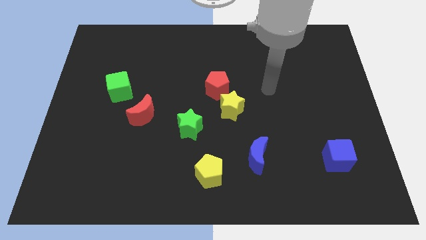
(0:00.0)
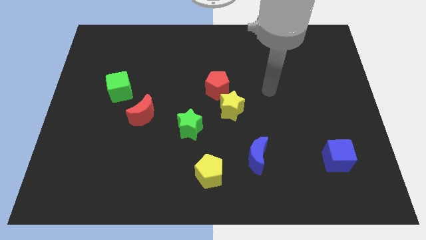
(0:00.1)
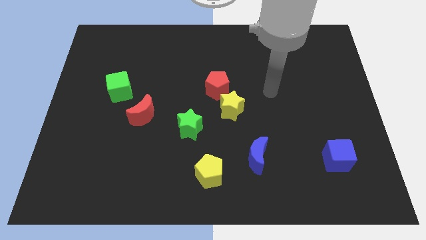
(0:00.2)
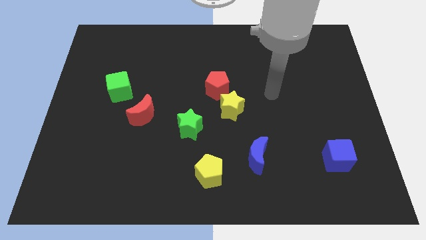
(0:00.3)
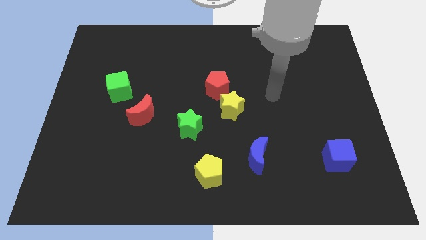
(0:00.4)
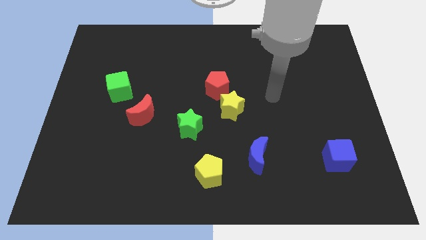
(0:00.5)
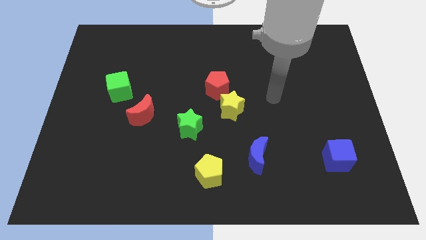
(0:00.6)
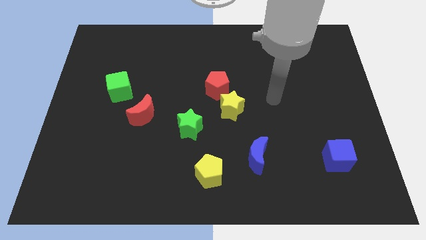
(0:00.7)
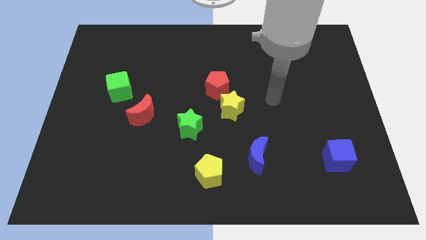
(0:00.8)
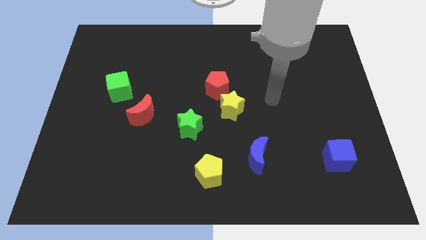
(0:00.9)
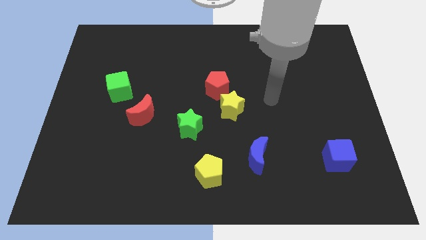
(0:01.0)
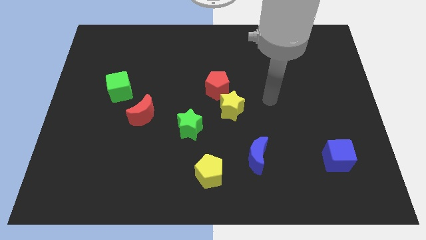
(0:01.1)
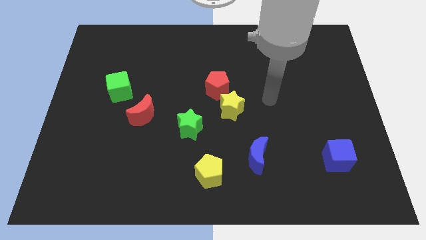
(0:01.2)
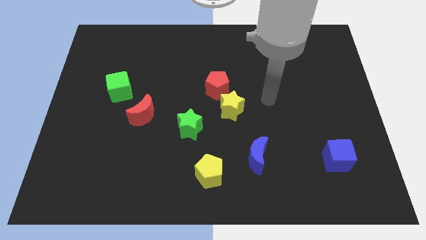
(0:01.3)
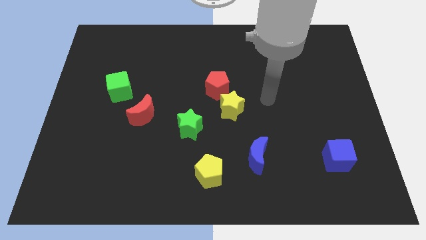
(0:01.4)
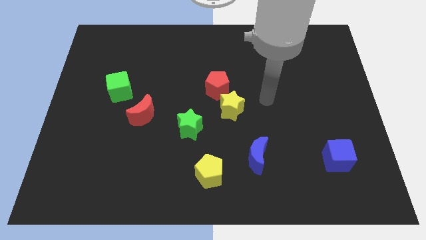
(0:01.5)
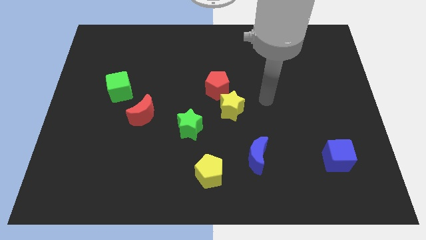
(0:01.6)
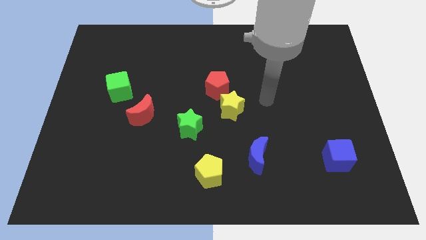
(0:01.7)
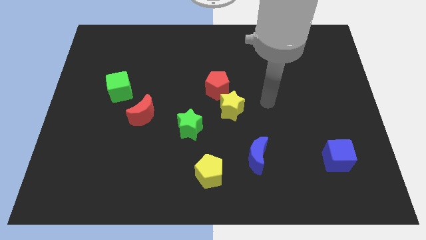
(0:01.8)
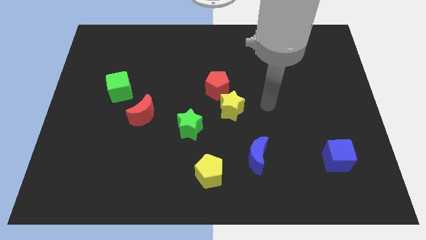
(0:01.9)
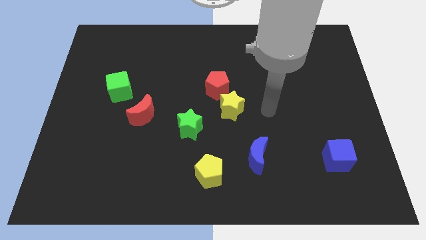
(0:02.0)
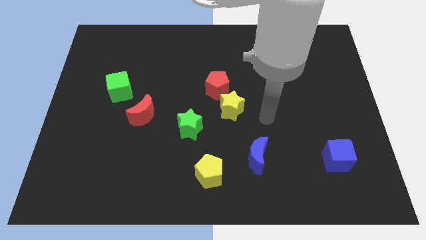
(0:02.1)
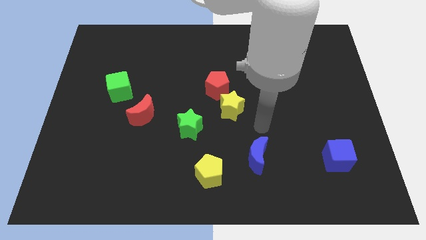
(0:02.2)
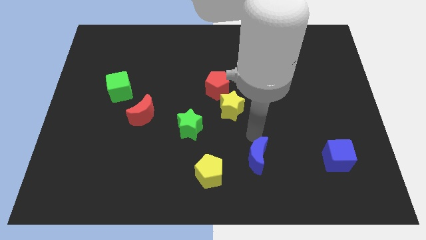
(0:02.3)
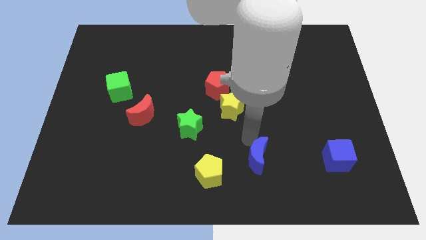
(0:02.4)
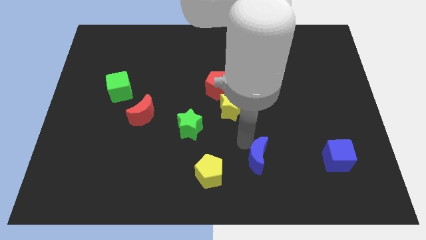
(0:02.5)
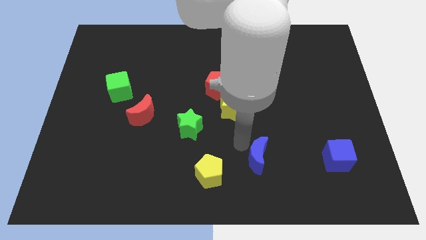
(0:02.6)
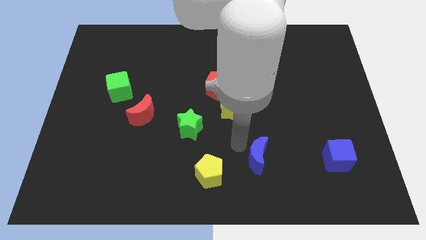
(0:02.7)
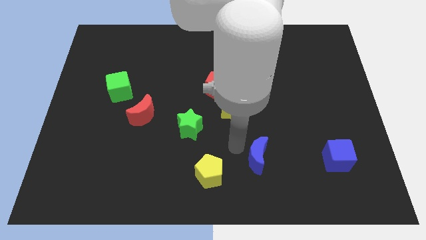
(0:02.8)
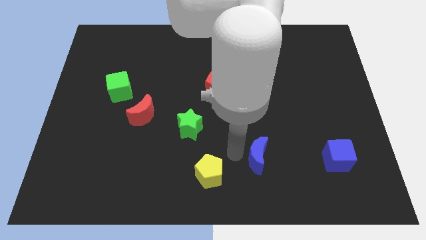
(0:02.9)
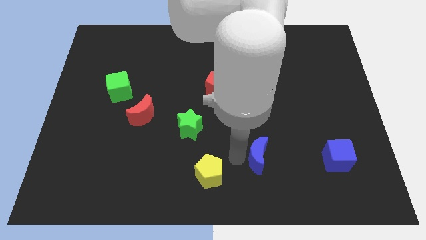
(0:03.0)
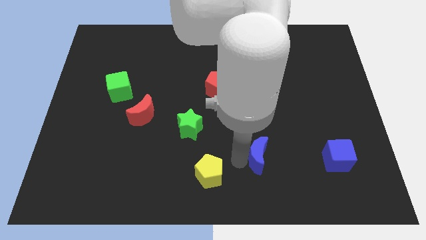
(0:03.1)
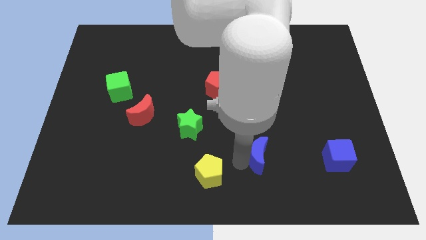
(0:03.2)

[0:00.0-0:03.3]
go near the blue moon

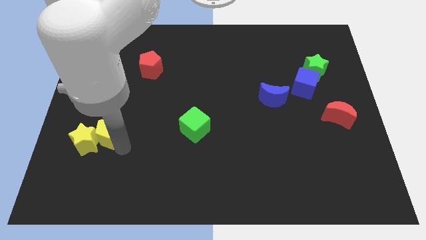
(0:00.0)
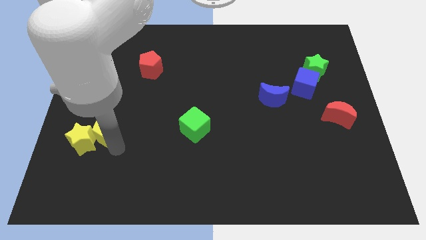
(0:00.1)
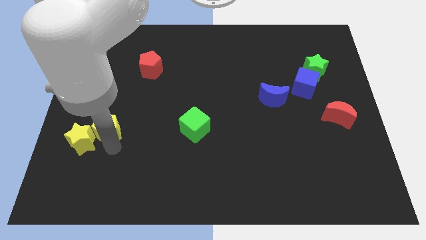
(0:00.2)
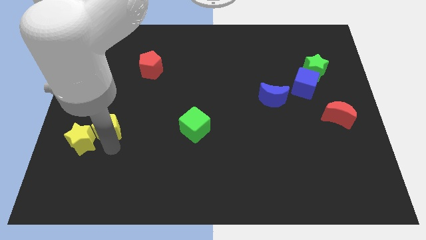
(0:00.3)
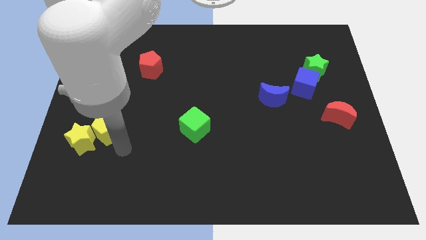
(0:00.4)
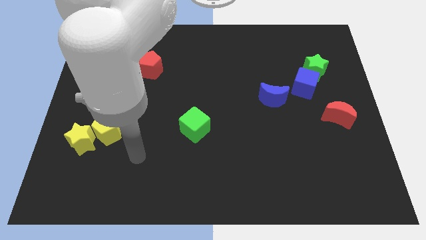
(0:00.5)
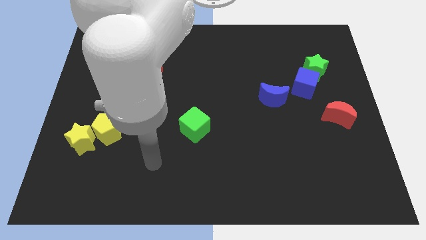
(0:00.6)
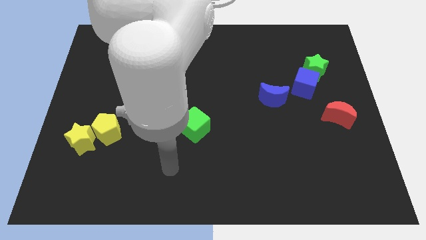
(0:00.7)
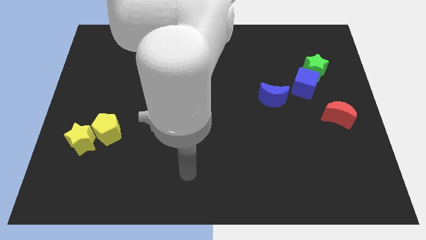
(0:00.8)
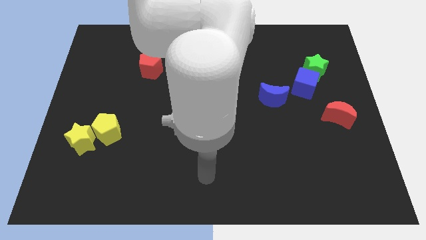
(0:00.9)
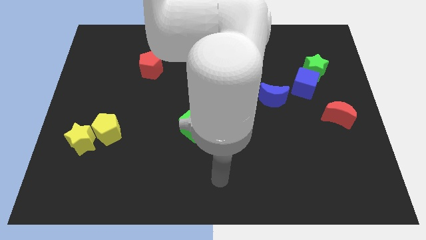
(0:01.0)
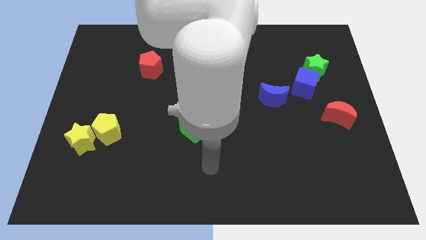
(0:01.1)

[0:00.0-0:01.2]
move your arm away from yellow pentagon

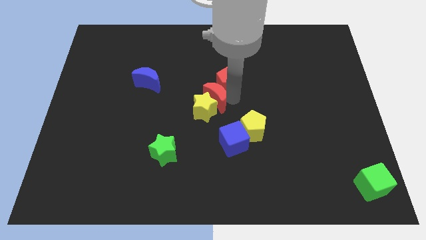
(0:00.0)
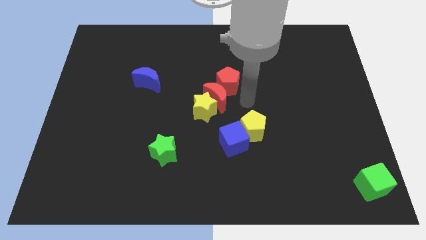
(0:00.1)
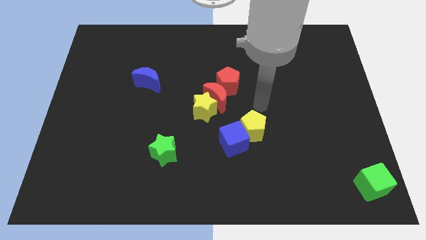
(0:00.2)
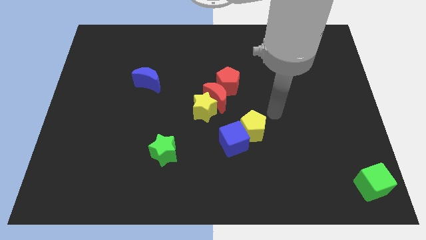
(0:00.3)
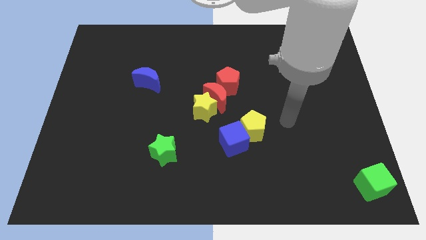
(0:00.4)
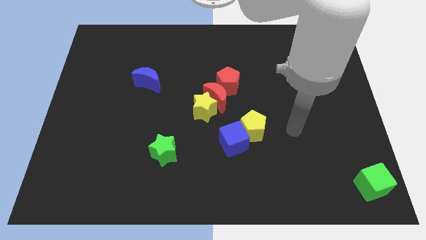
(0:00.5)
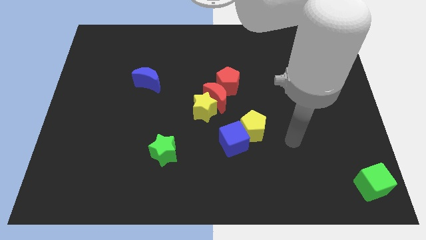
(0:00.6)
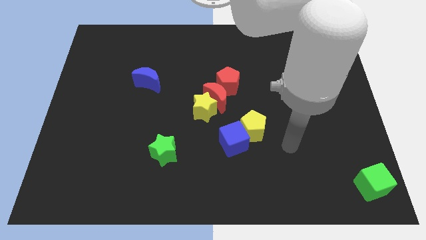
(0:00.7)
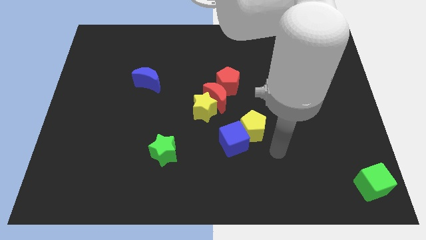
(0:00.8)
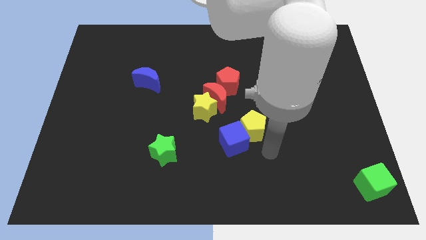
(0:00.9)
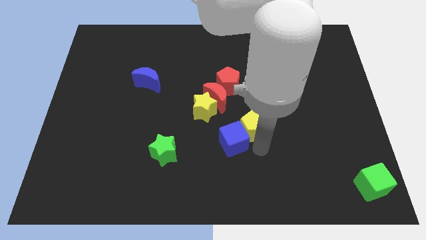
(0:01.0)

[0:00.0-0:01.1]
place your arm at the bottom of yellow pentagon

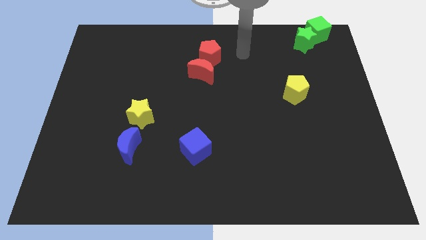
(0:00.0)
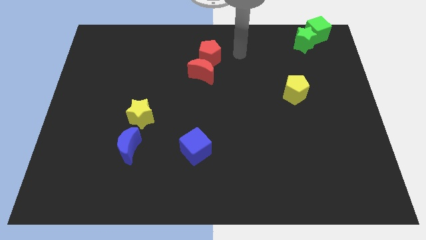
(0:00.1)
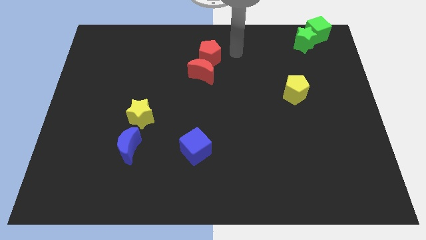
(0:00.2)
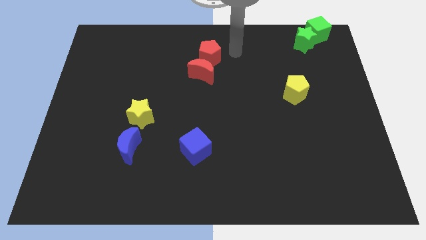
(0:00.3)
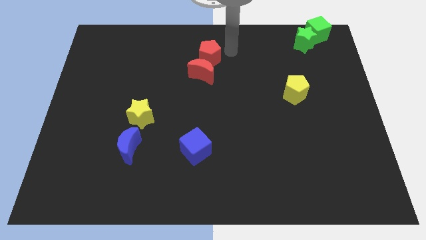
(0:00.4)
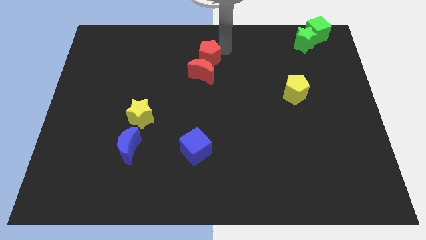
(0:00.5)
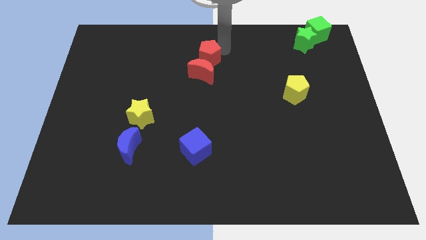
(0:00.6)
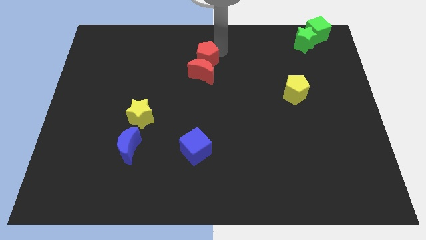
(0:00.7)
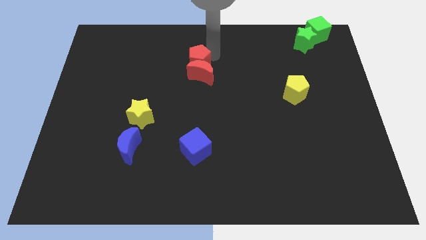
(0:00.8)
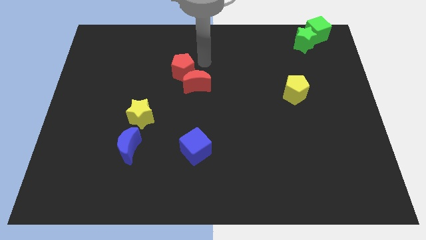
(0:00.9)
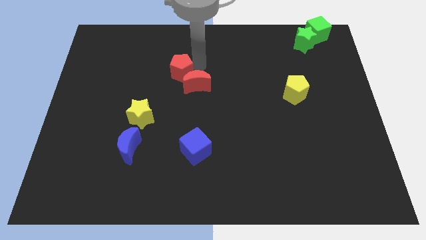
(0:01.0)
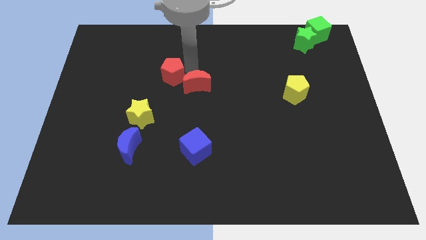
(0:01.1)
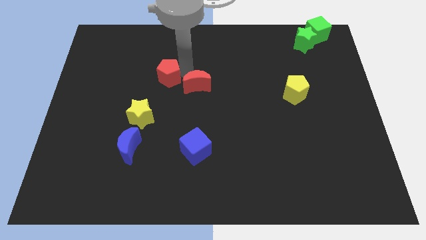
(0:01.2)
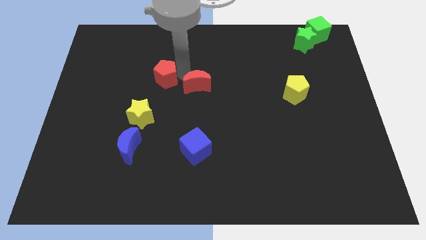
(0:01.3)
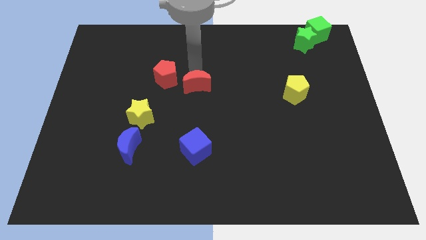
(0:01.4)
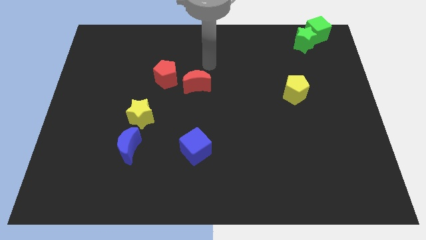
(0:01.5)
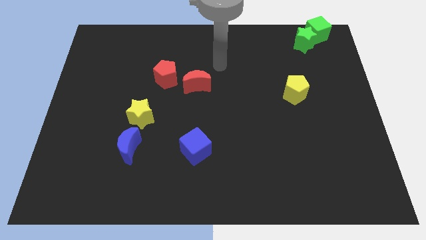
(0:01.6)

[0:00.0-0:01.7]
move the red pentagon away from the red moon

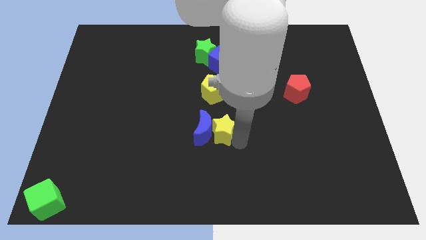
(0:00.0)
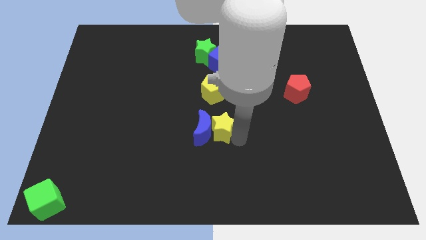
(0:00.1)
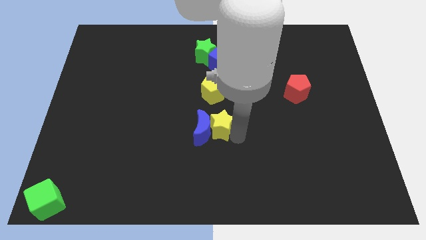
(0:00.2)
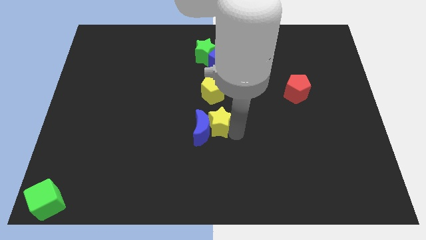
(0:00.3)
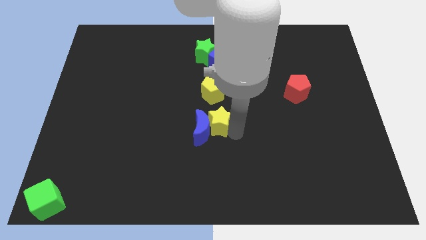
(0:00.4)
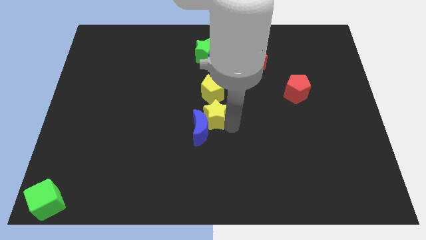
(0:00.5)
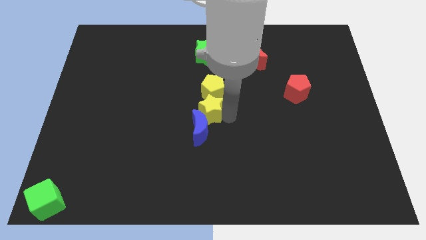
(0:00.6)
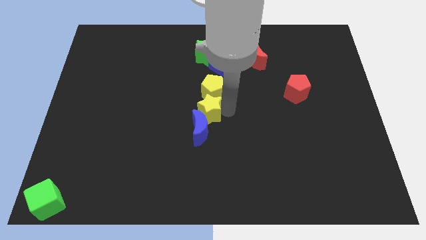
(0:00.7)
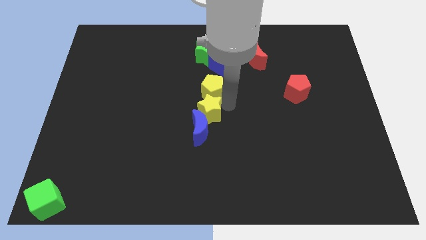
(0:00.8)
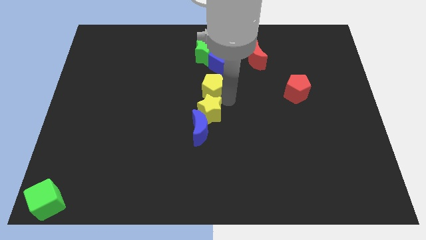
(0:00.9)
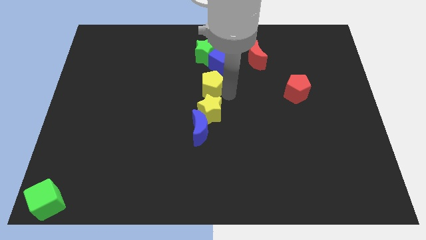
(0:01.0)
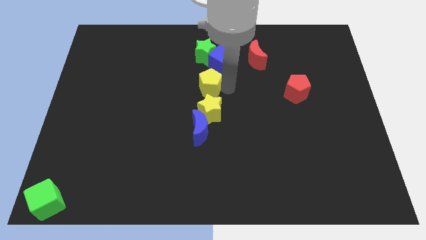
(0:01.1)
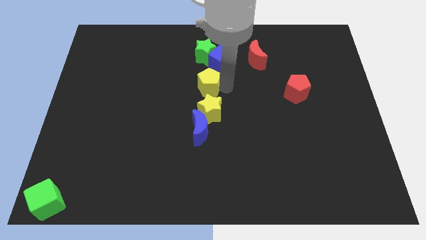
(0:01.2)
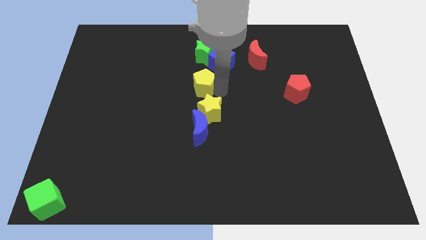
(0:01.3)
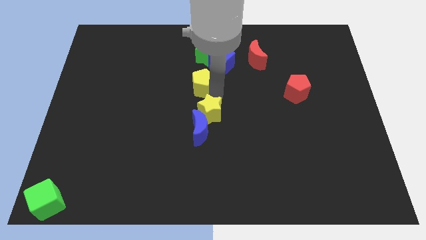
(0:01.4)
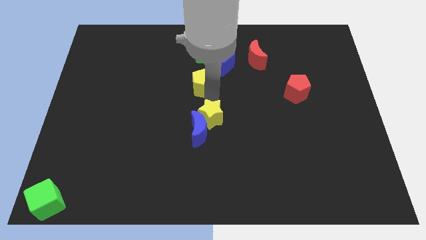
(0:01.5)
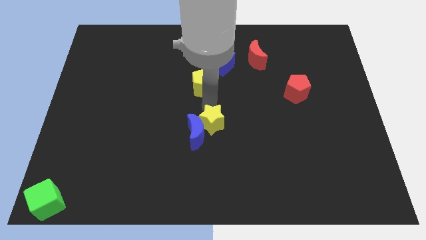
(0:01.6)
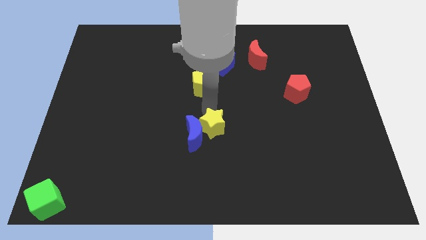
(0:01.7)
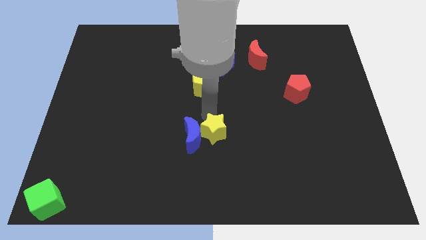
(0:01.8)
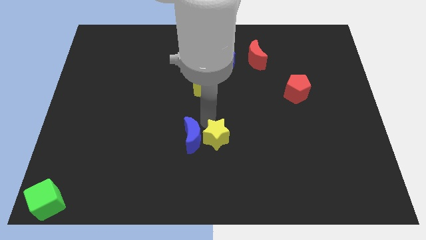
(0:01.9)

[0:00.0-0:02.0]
push the yellow star to the center of the board
